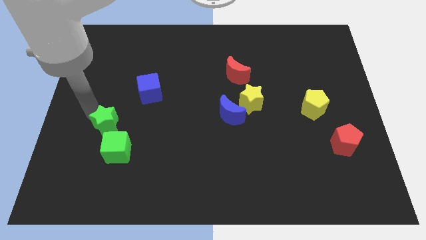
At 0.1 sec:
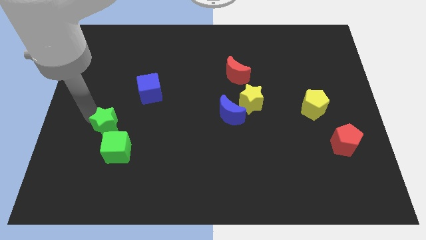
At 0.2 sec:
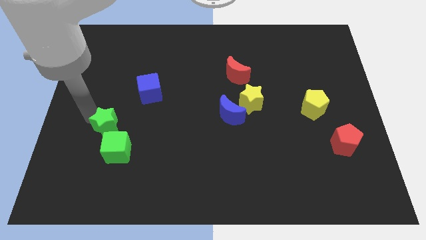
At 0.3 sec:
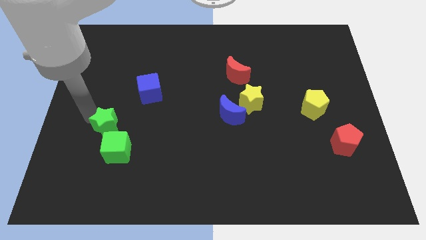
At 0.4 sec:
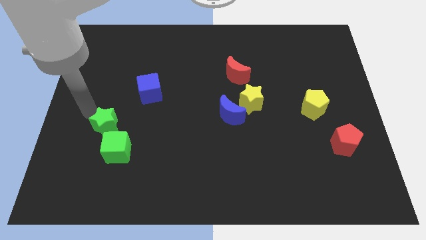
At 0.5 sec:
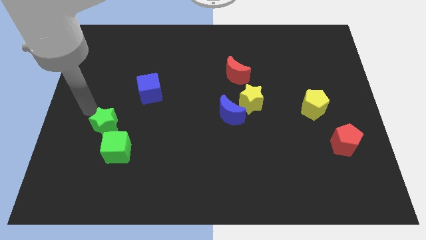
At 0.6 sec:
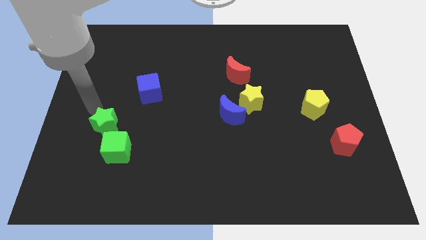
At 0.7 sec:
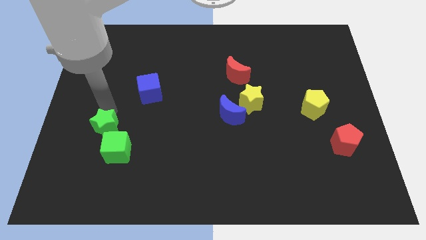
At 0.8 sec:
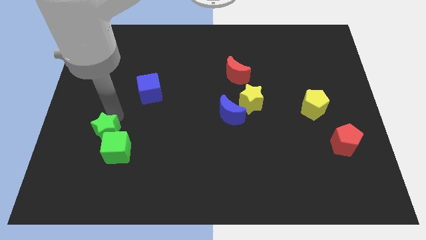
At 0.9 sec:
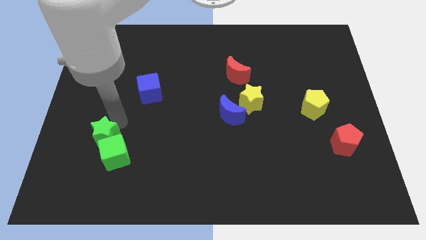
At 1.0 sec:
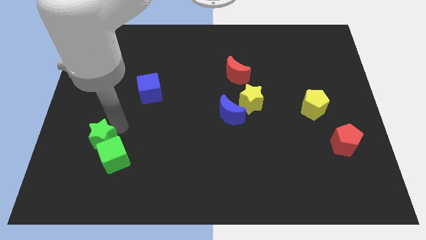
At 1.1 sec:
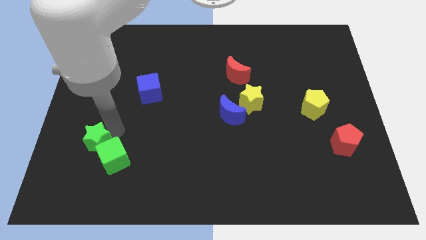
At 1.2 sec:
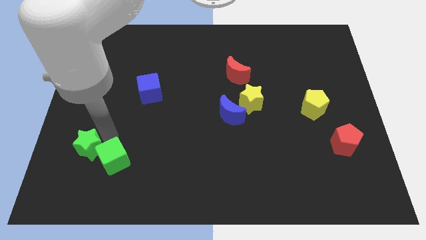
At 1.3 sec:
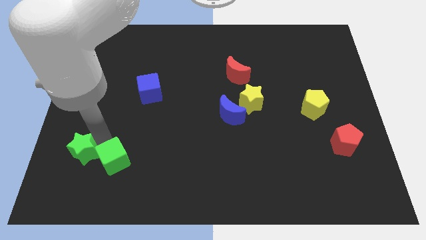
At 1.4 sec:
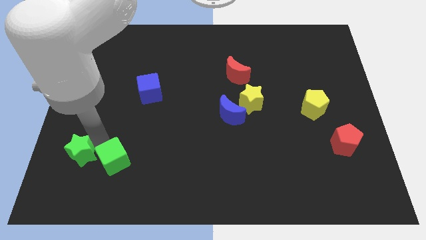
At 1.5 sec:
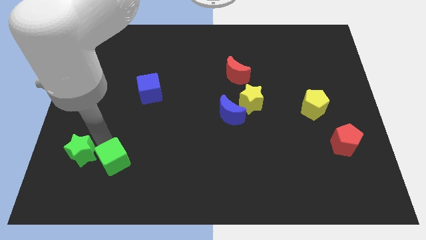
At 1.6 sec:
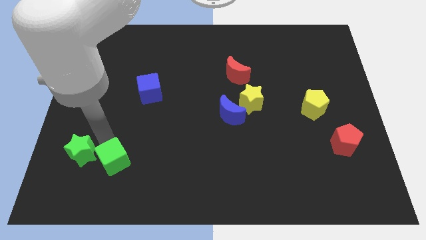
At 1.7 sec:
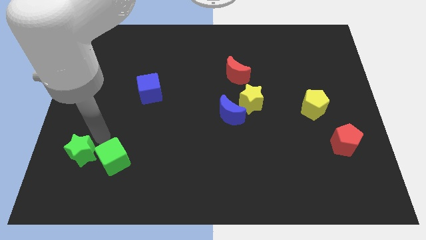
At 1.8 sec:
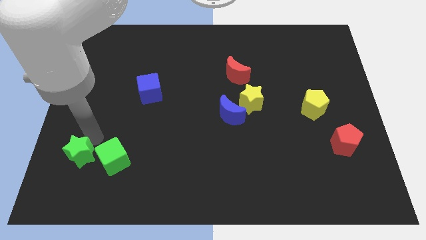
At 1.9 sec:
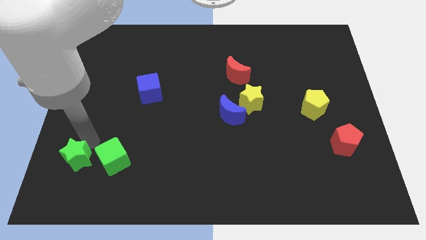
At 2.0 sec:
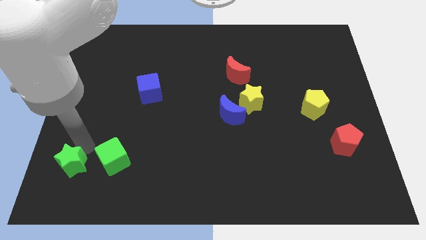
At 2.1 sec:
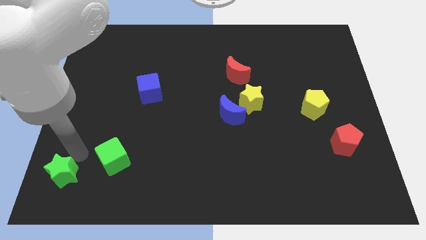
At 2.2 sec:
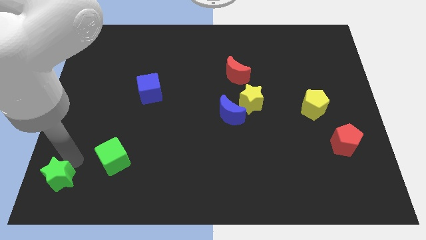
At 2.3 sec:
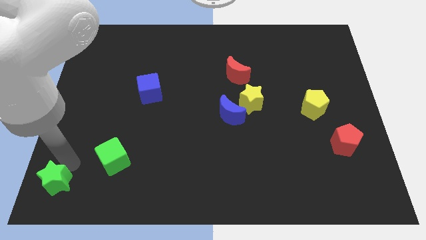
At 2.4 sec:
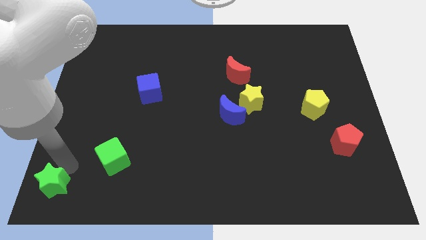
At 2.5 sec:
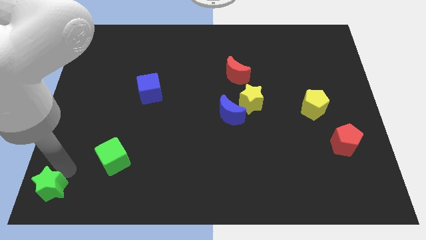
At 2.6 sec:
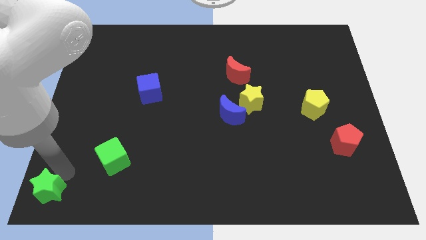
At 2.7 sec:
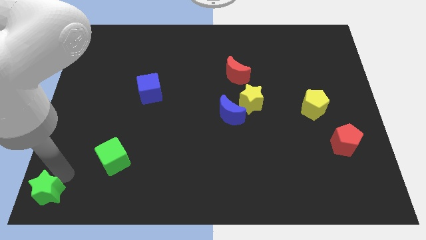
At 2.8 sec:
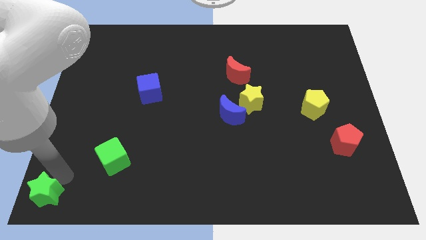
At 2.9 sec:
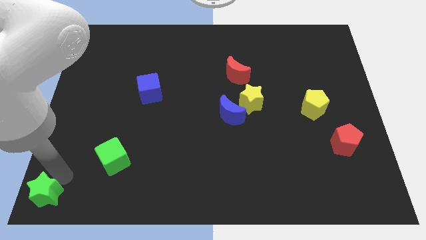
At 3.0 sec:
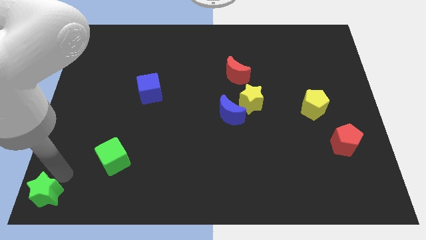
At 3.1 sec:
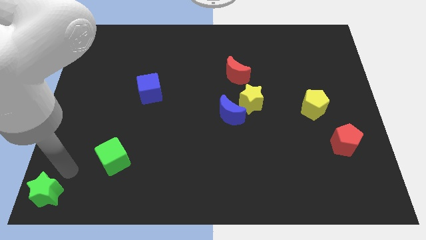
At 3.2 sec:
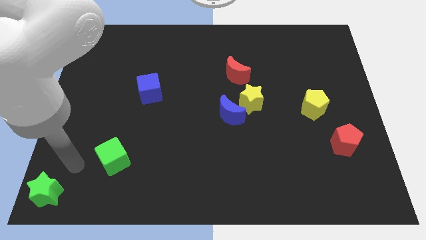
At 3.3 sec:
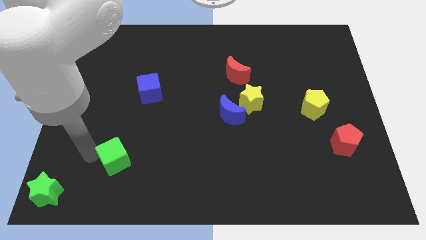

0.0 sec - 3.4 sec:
move the green star to the bottom left corner of the board

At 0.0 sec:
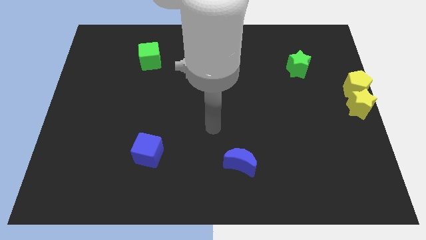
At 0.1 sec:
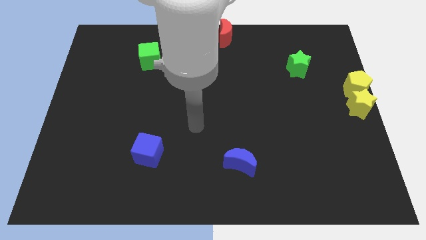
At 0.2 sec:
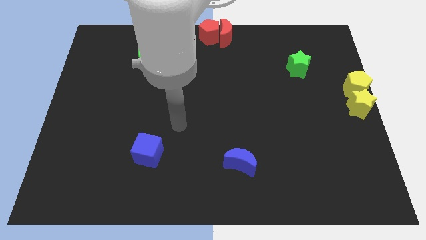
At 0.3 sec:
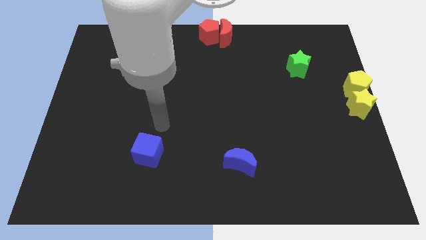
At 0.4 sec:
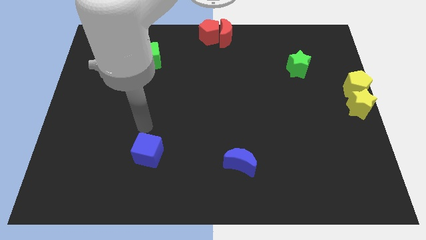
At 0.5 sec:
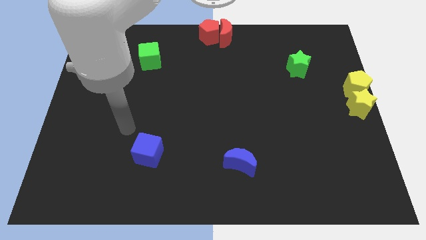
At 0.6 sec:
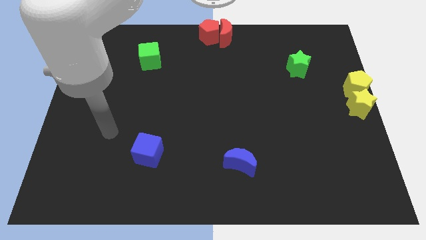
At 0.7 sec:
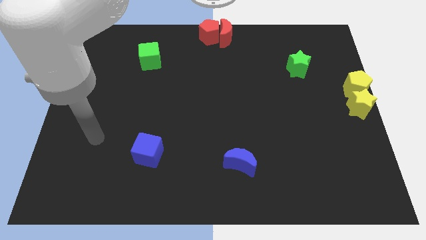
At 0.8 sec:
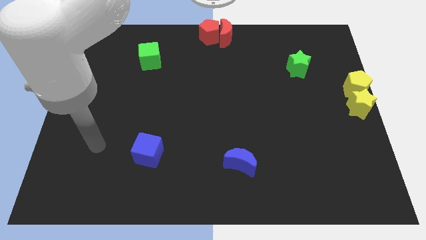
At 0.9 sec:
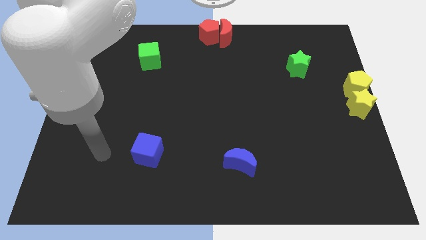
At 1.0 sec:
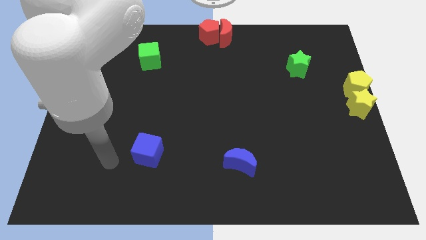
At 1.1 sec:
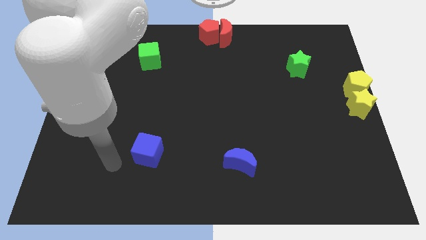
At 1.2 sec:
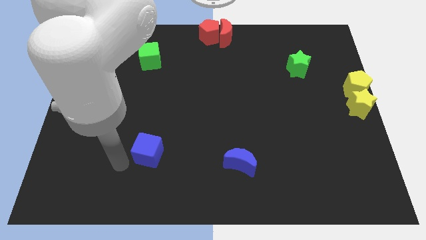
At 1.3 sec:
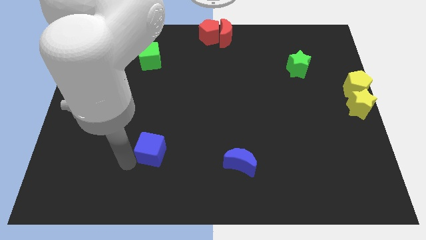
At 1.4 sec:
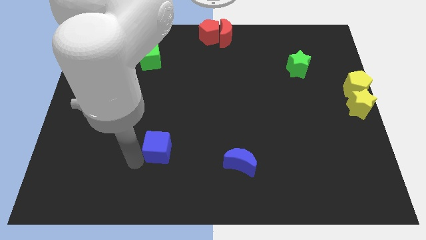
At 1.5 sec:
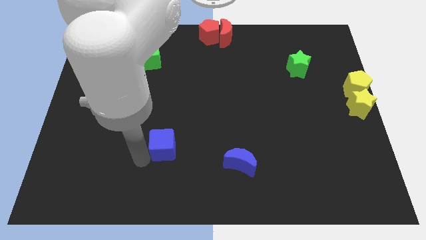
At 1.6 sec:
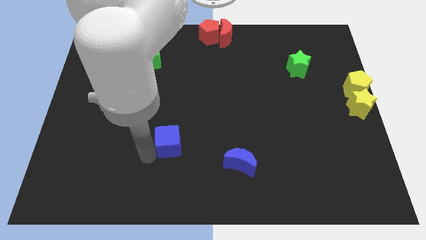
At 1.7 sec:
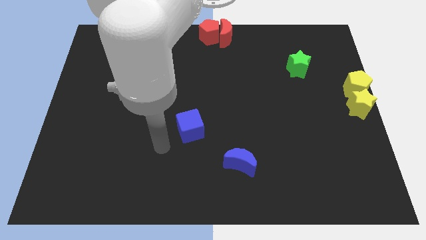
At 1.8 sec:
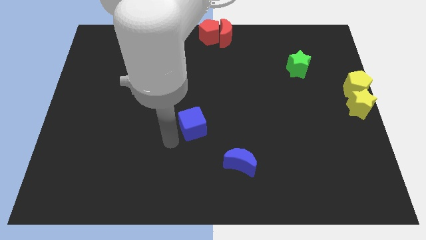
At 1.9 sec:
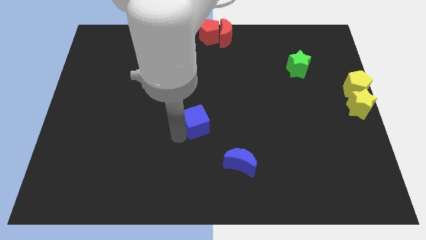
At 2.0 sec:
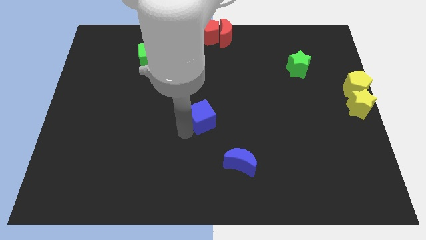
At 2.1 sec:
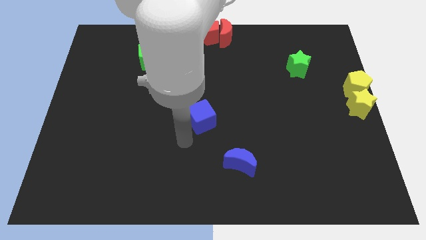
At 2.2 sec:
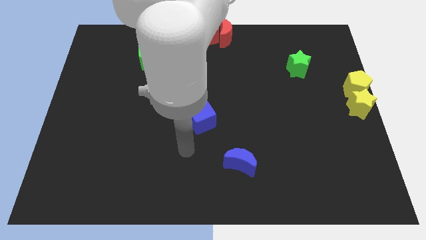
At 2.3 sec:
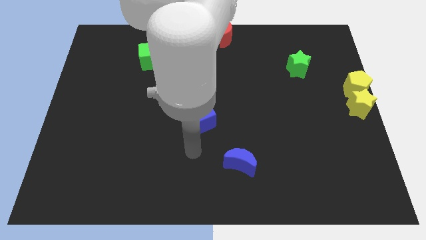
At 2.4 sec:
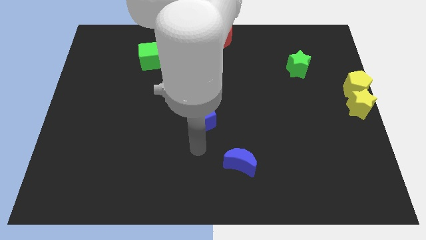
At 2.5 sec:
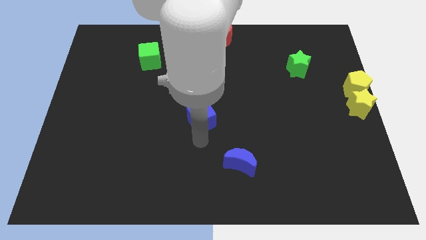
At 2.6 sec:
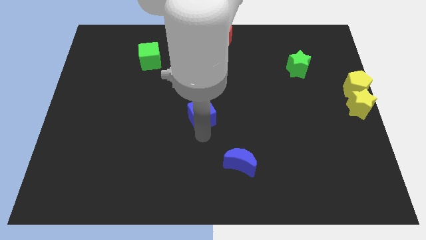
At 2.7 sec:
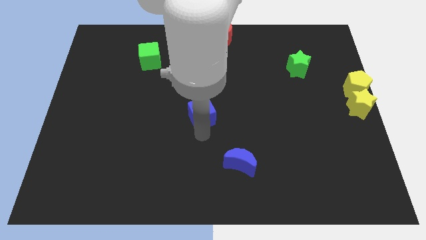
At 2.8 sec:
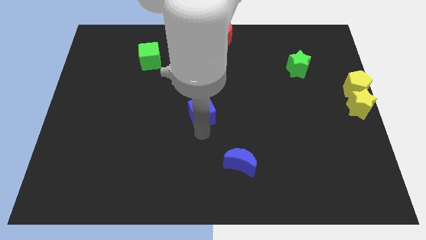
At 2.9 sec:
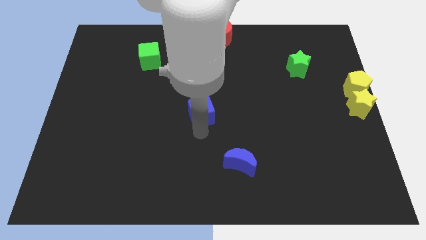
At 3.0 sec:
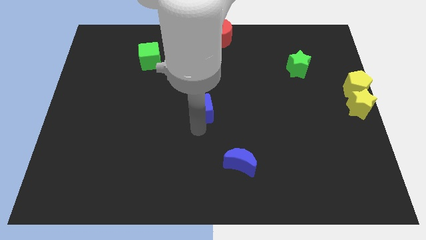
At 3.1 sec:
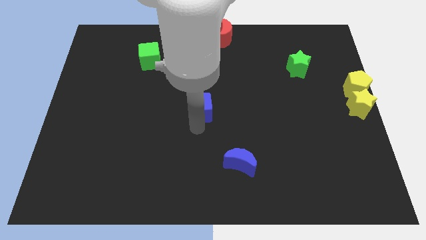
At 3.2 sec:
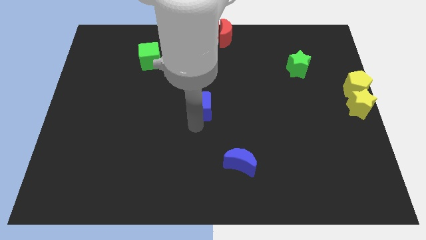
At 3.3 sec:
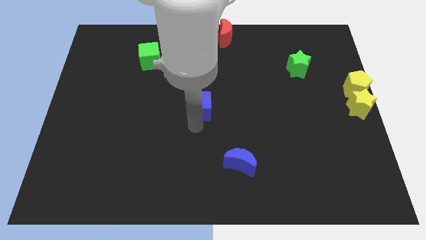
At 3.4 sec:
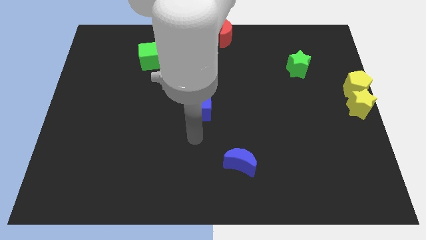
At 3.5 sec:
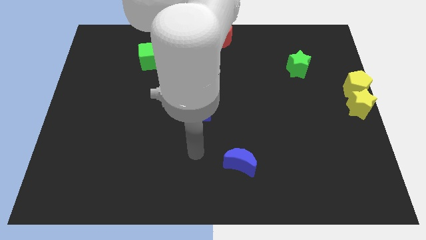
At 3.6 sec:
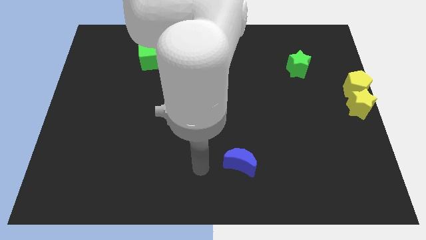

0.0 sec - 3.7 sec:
slide the blue cube to the center of the board

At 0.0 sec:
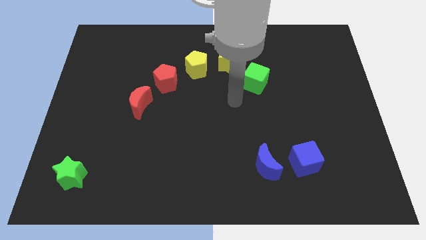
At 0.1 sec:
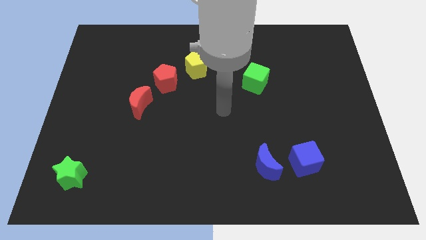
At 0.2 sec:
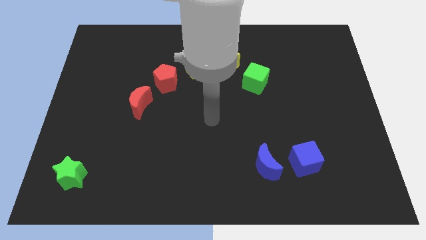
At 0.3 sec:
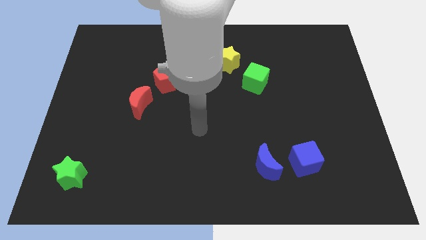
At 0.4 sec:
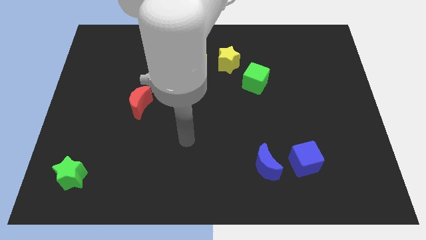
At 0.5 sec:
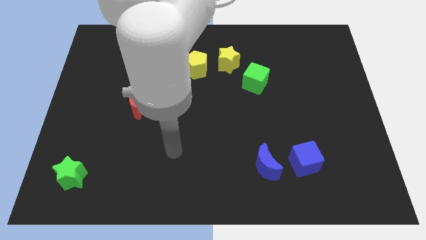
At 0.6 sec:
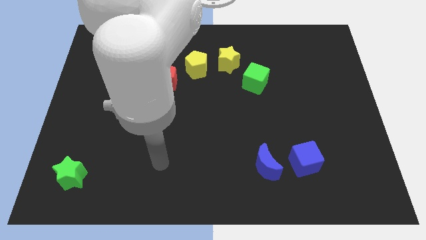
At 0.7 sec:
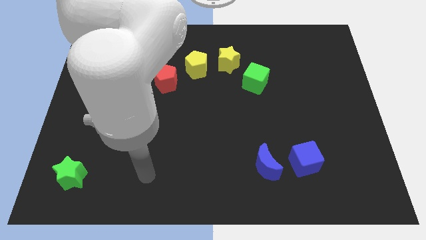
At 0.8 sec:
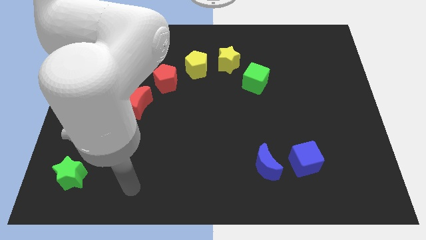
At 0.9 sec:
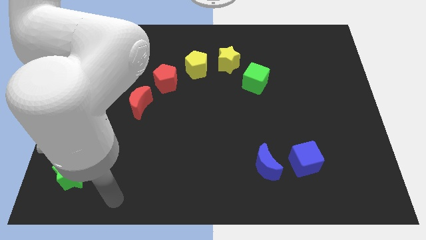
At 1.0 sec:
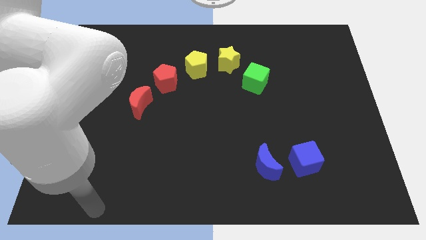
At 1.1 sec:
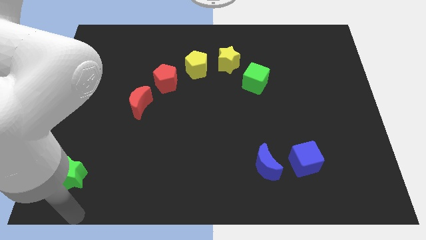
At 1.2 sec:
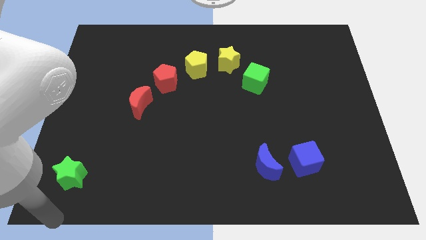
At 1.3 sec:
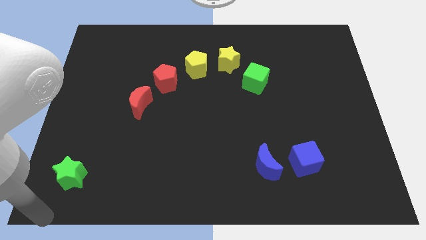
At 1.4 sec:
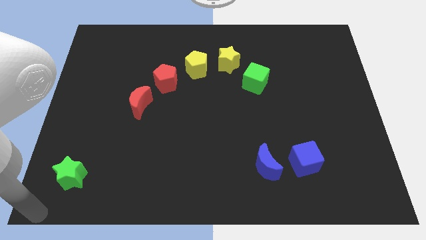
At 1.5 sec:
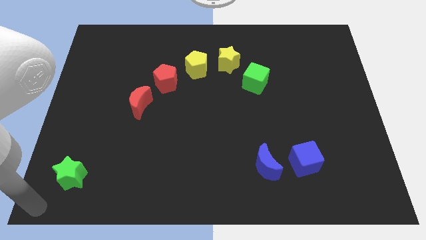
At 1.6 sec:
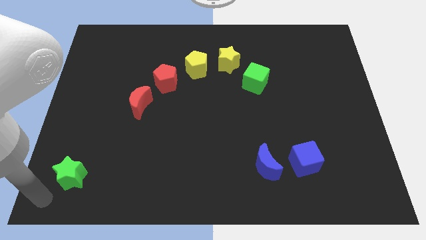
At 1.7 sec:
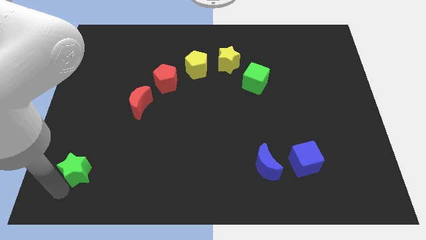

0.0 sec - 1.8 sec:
move your arm to the bottom of the green star
